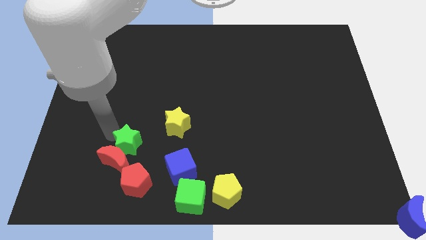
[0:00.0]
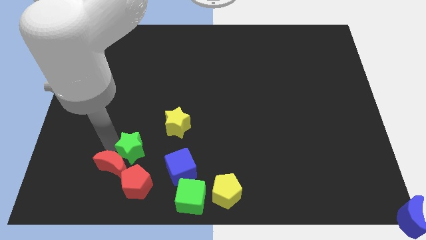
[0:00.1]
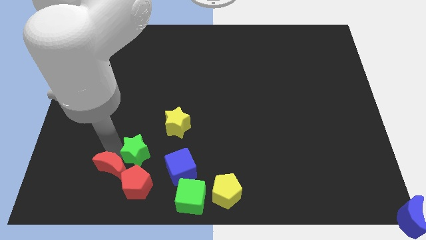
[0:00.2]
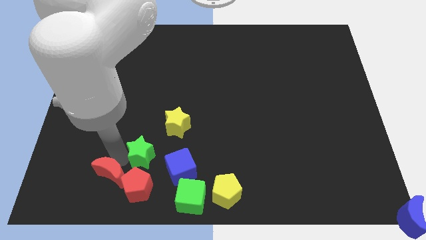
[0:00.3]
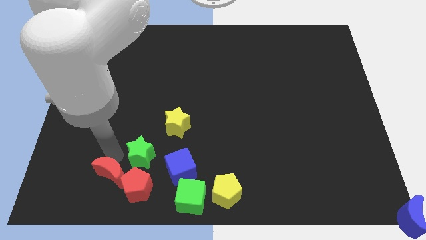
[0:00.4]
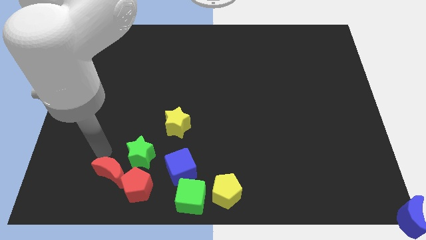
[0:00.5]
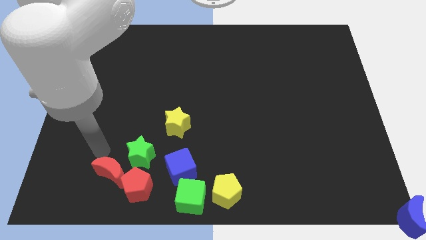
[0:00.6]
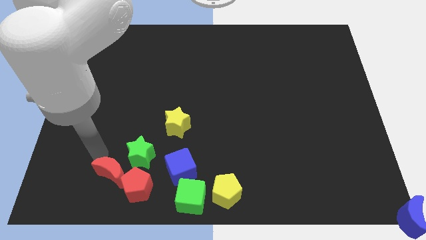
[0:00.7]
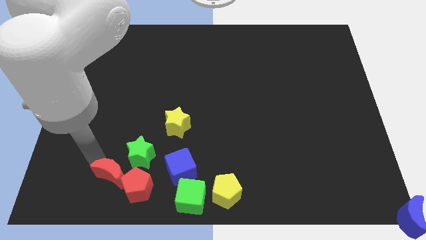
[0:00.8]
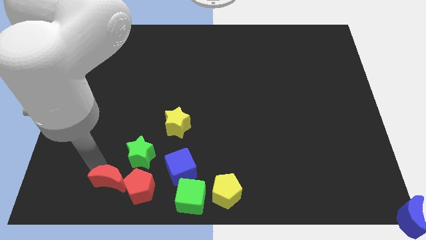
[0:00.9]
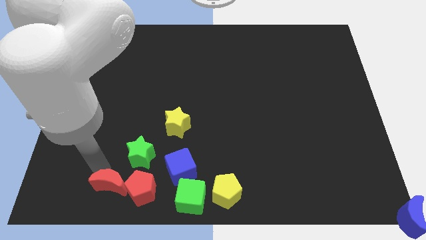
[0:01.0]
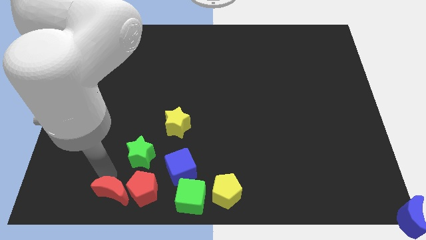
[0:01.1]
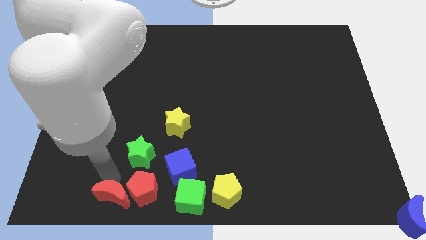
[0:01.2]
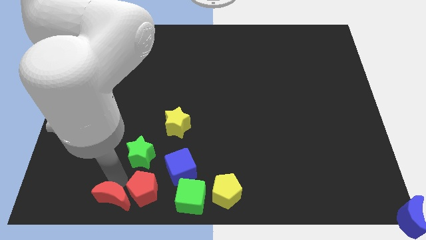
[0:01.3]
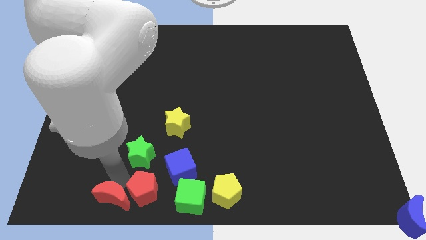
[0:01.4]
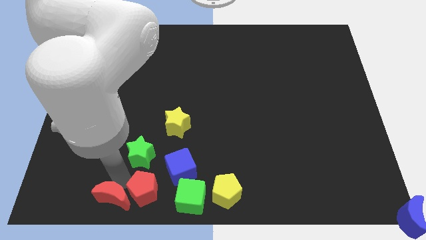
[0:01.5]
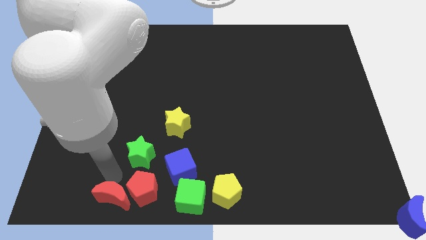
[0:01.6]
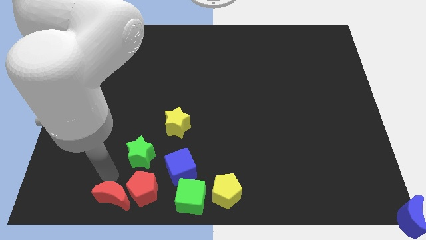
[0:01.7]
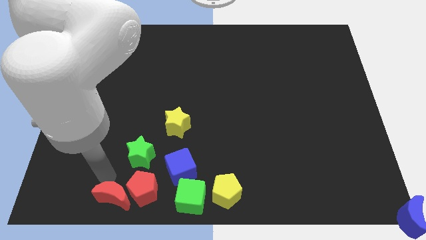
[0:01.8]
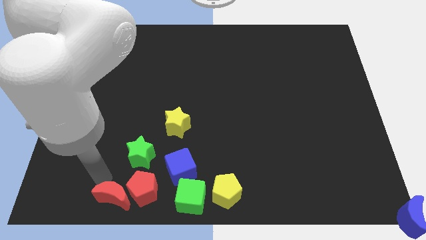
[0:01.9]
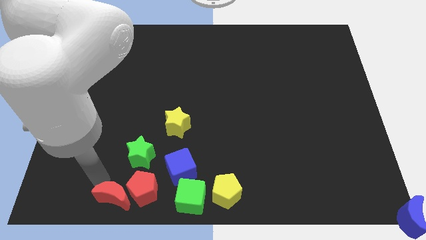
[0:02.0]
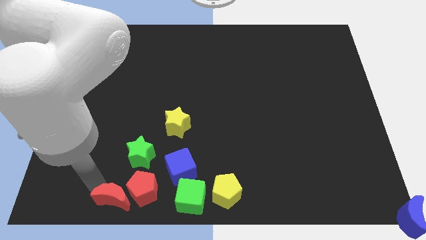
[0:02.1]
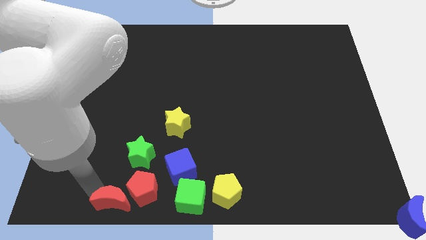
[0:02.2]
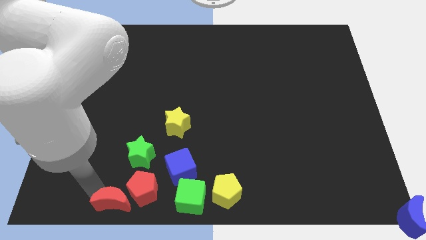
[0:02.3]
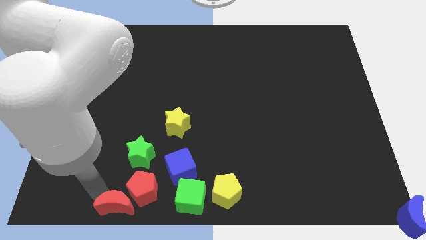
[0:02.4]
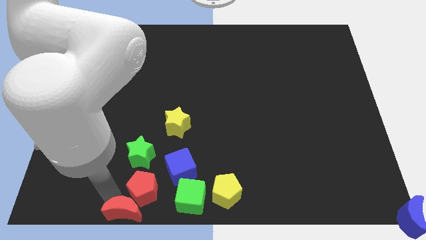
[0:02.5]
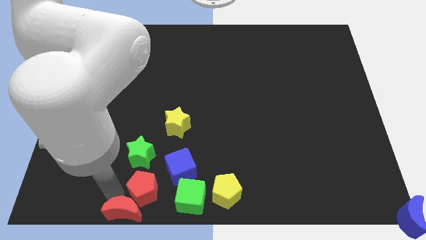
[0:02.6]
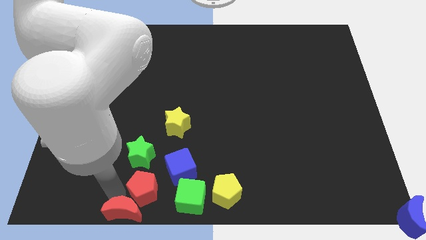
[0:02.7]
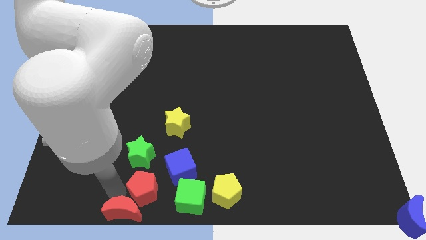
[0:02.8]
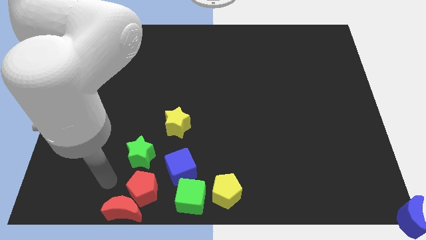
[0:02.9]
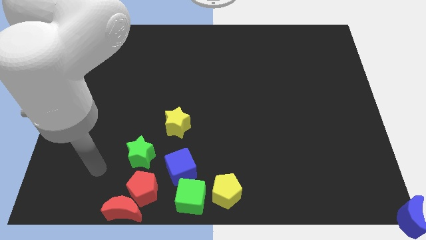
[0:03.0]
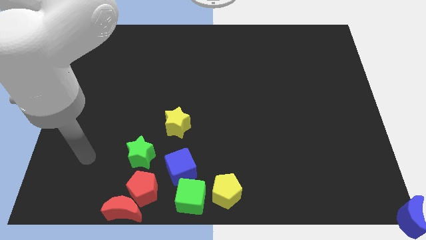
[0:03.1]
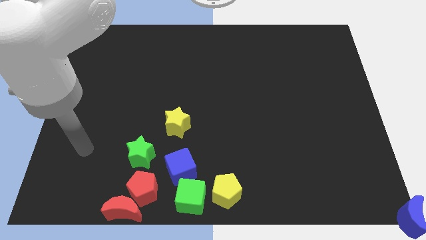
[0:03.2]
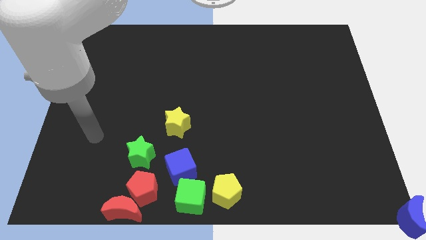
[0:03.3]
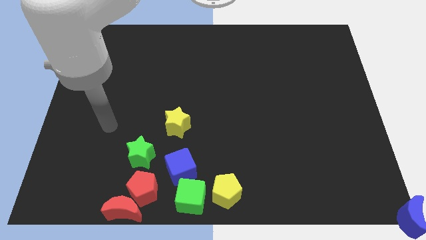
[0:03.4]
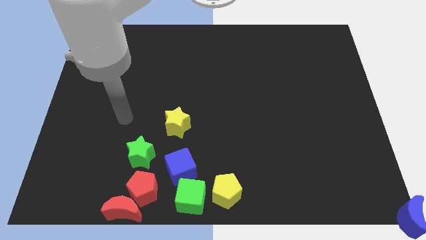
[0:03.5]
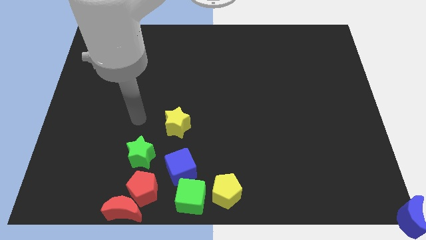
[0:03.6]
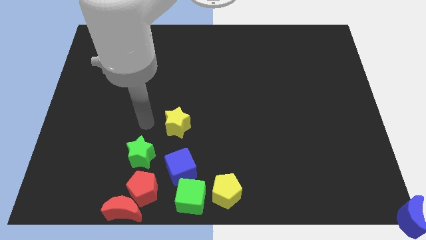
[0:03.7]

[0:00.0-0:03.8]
push the red moon to the bottom left of the red pentagon

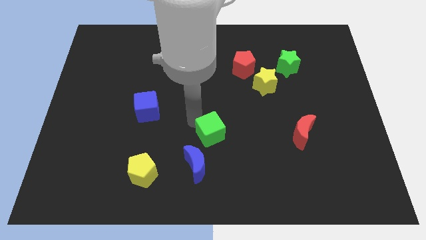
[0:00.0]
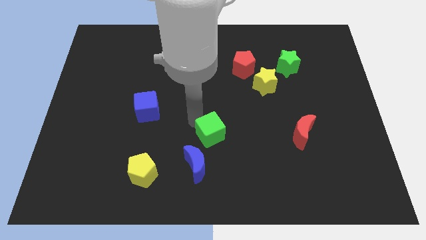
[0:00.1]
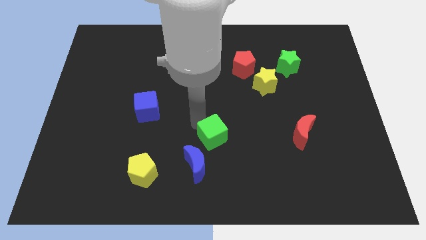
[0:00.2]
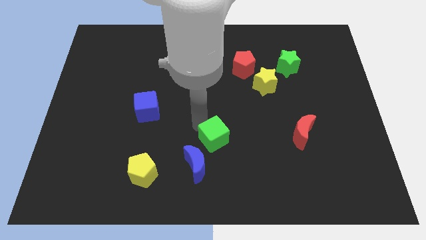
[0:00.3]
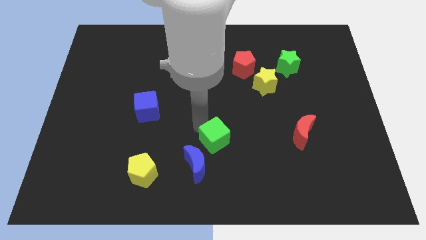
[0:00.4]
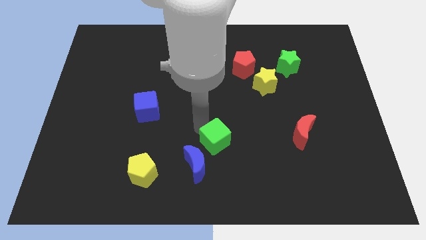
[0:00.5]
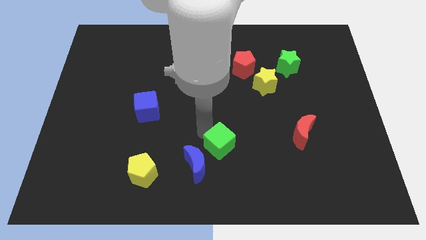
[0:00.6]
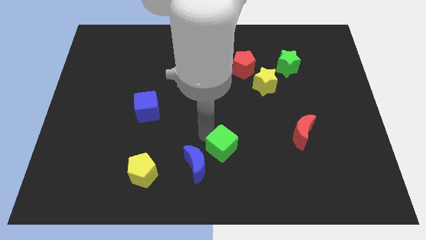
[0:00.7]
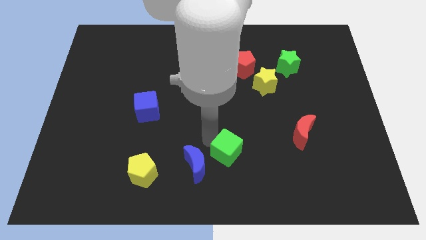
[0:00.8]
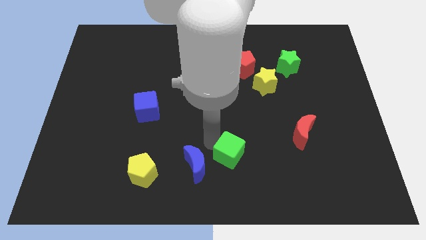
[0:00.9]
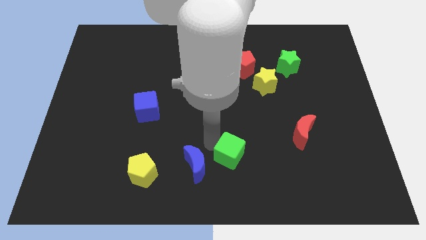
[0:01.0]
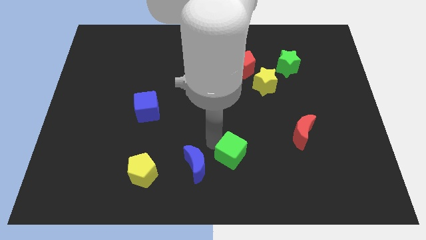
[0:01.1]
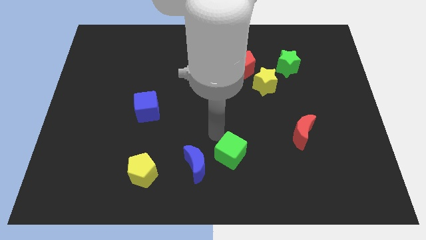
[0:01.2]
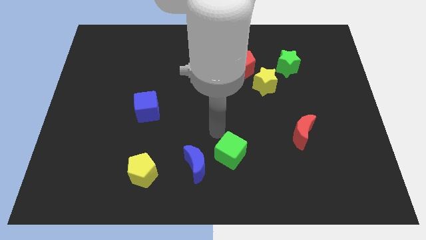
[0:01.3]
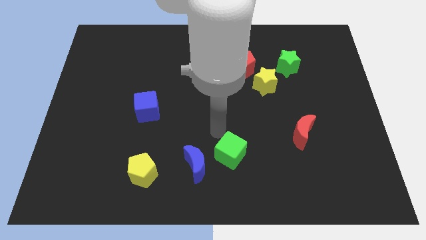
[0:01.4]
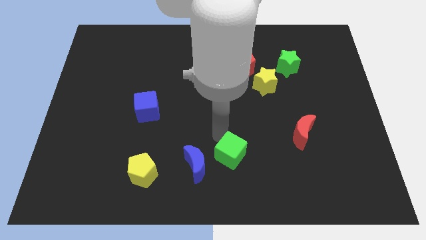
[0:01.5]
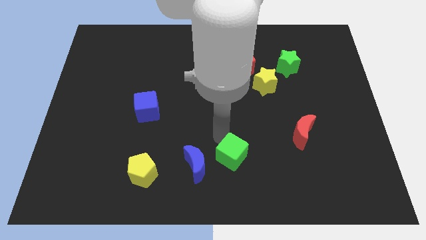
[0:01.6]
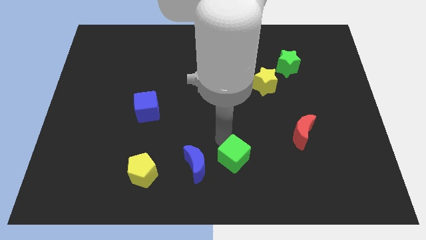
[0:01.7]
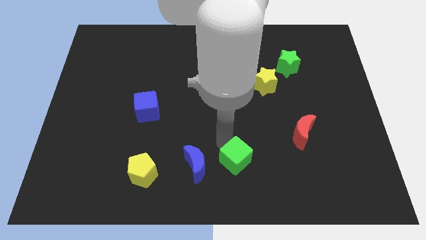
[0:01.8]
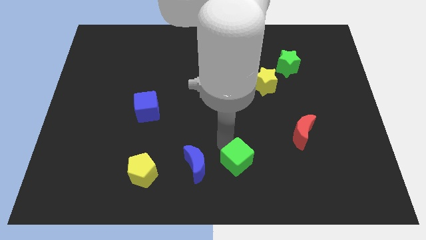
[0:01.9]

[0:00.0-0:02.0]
move the green cube right to the blue moon

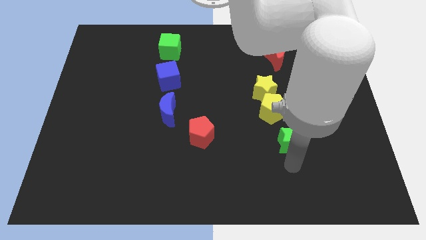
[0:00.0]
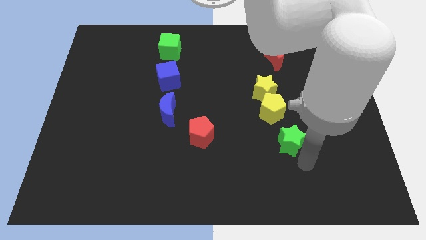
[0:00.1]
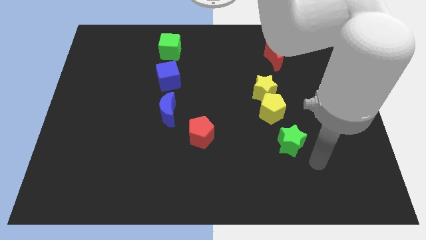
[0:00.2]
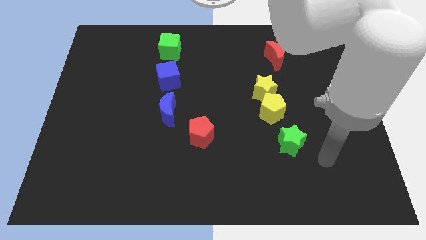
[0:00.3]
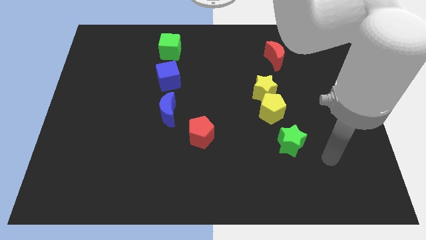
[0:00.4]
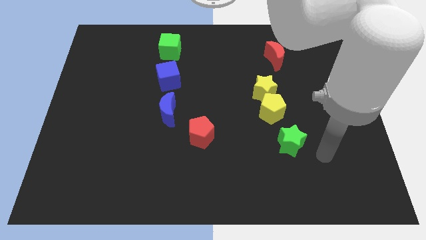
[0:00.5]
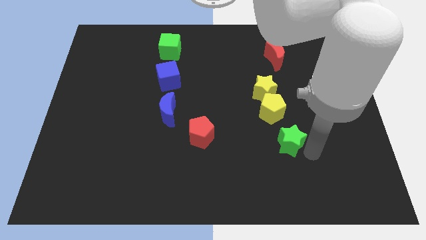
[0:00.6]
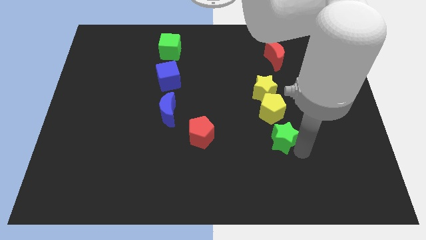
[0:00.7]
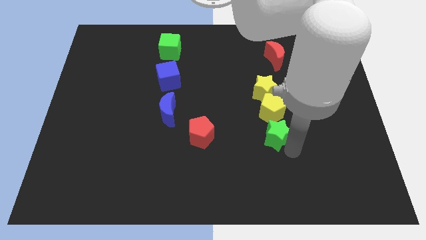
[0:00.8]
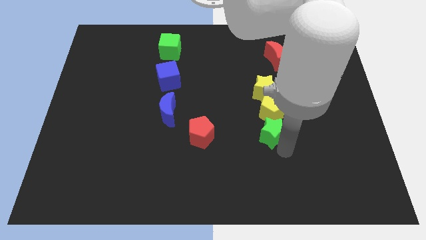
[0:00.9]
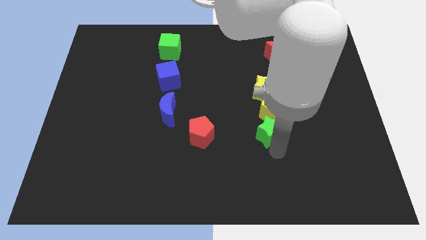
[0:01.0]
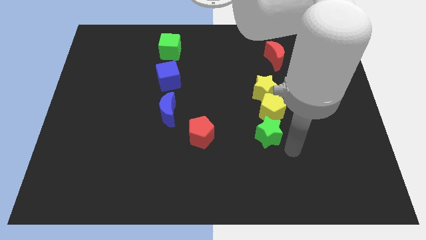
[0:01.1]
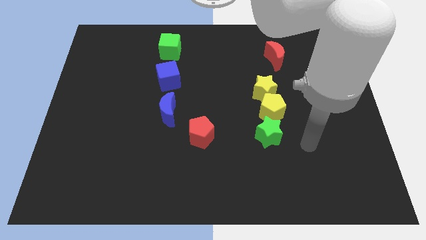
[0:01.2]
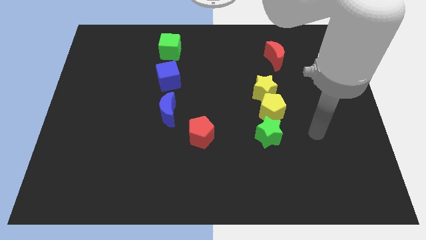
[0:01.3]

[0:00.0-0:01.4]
move the green star below the yellow pentagon

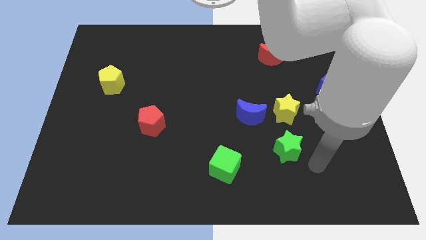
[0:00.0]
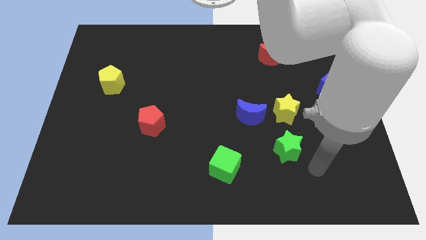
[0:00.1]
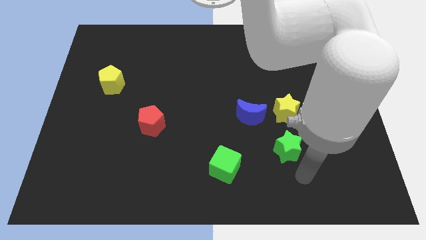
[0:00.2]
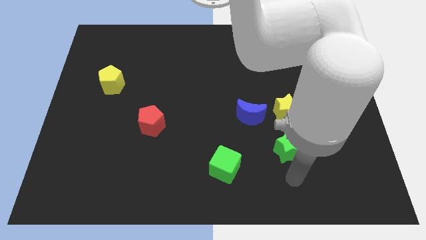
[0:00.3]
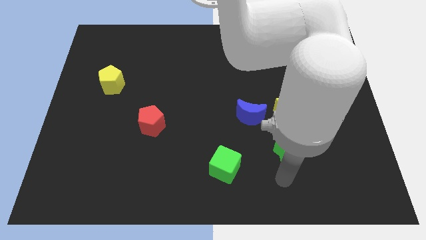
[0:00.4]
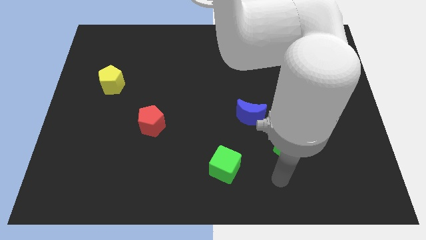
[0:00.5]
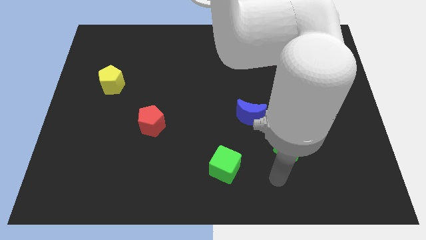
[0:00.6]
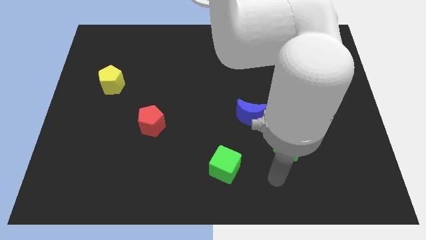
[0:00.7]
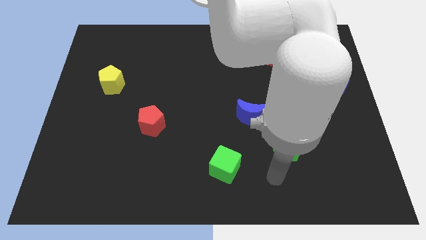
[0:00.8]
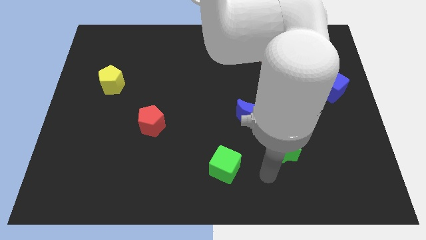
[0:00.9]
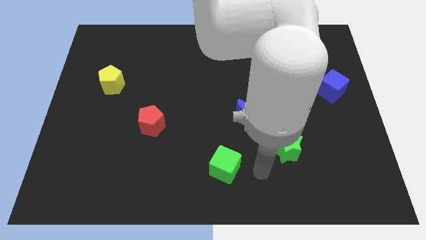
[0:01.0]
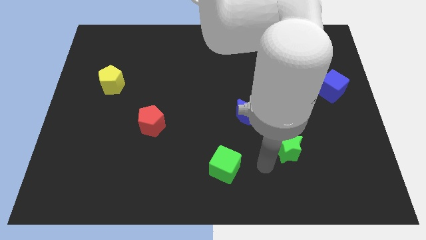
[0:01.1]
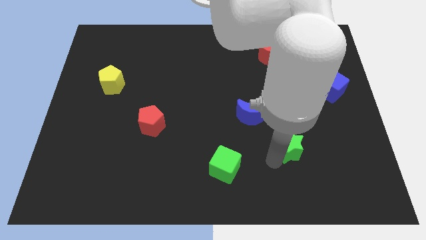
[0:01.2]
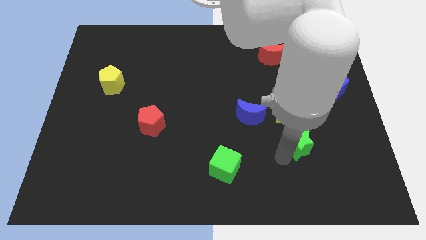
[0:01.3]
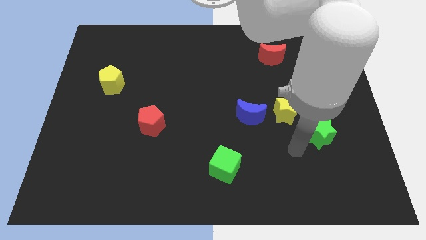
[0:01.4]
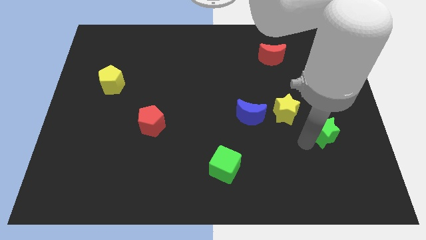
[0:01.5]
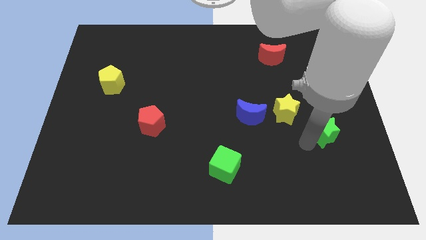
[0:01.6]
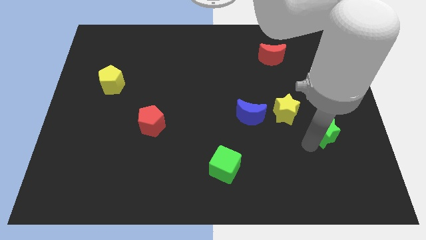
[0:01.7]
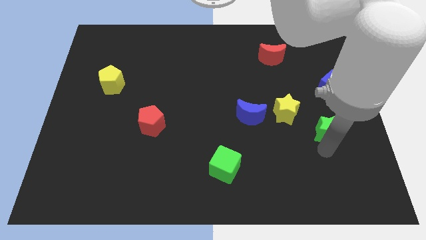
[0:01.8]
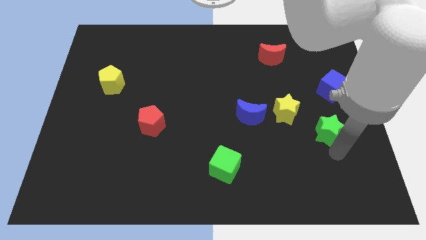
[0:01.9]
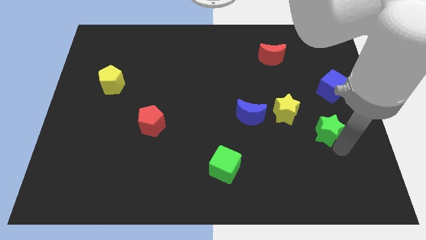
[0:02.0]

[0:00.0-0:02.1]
place green star below the blue cube
